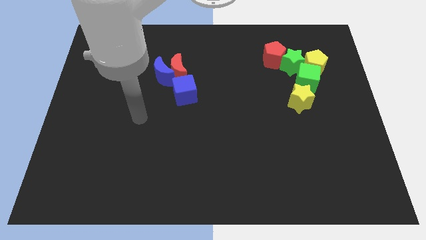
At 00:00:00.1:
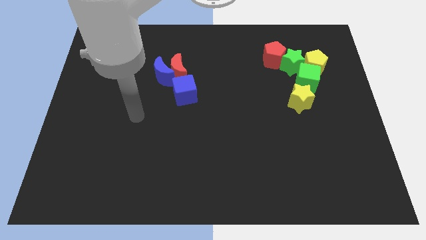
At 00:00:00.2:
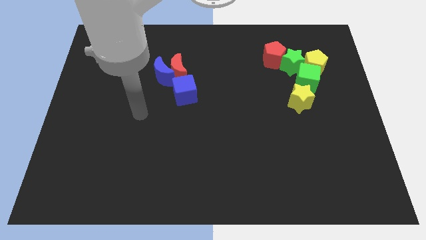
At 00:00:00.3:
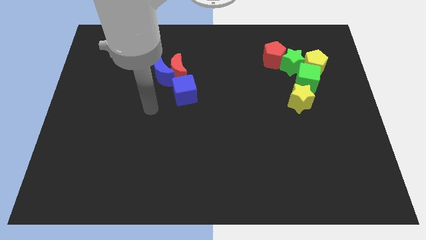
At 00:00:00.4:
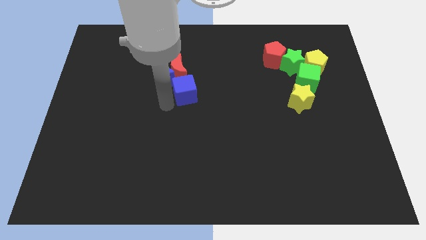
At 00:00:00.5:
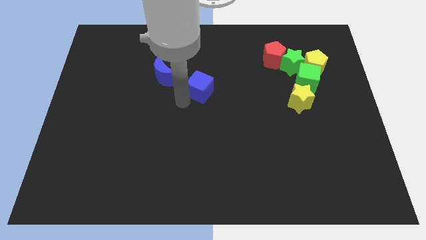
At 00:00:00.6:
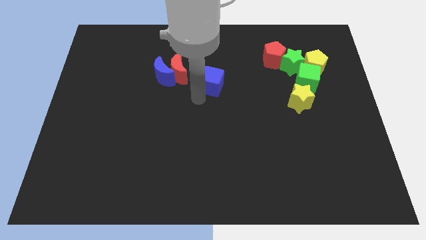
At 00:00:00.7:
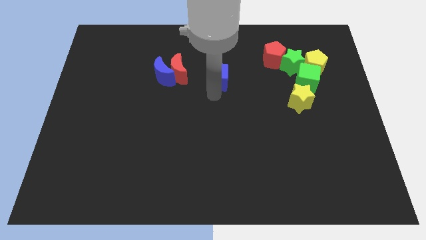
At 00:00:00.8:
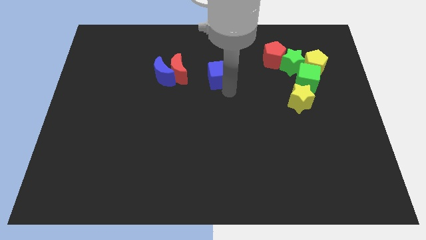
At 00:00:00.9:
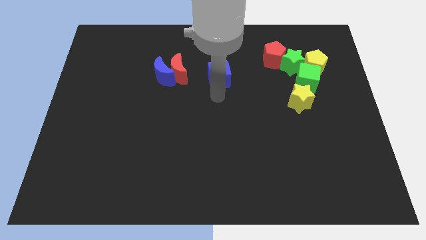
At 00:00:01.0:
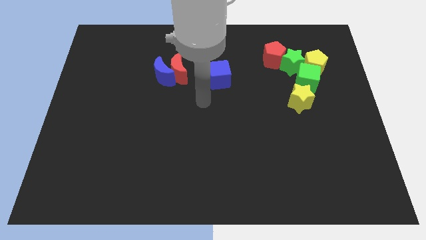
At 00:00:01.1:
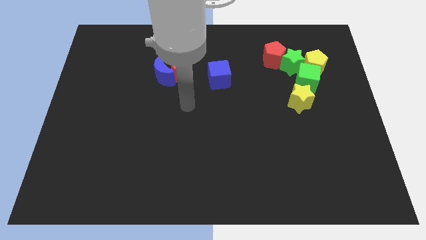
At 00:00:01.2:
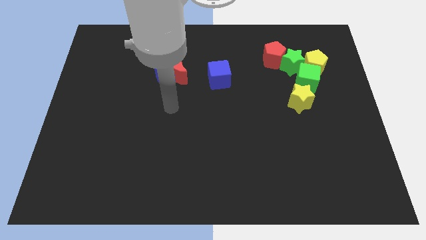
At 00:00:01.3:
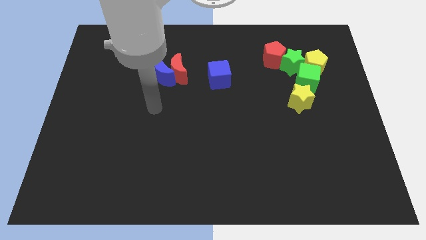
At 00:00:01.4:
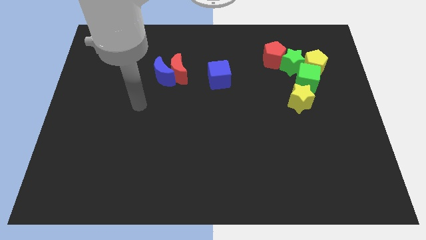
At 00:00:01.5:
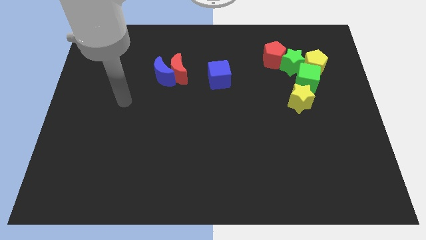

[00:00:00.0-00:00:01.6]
place the blue cube in between the red moon and the green cube

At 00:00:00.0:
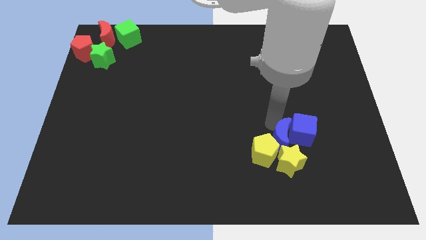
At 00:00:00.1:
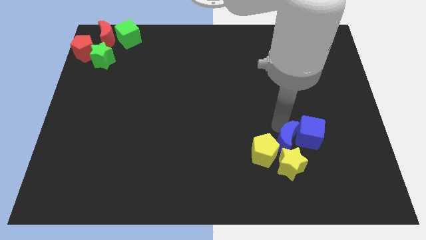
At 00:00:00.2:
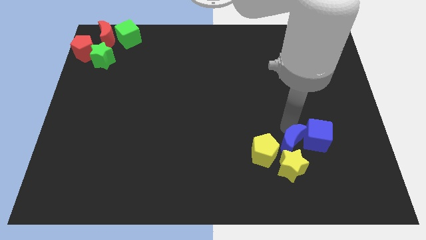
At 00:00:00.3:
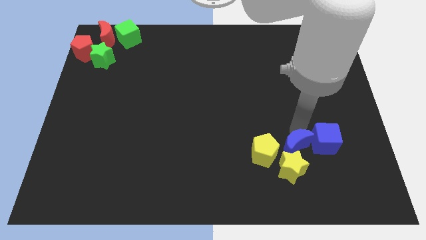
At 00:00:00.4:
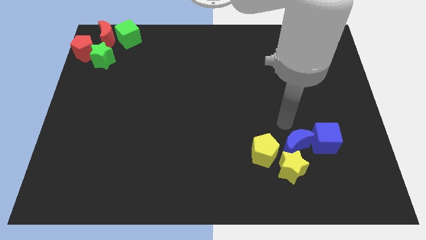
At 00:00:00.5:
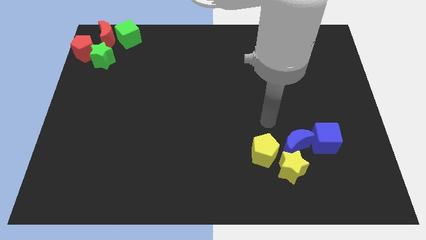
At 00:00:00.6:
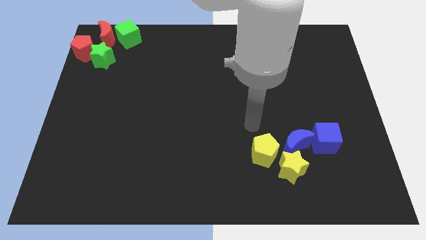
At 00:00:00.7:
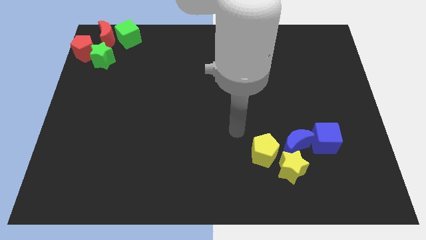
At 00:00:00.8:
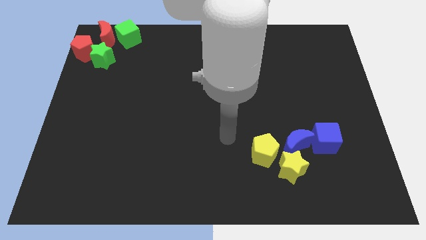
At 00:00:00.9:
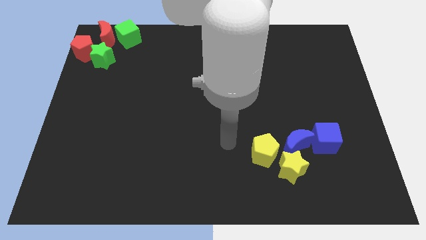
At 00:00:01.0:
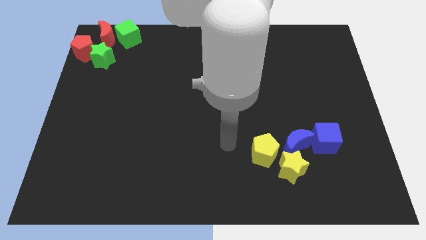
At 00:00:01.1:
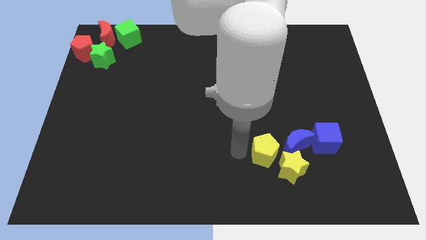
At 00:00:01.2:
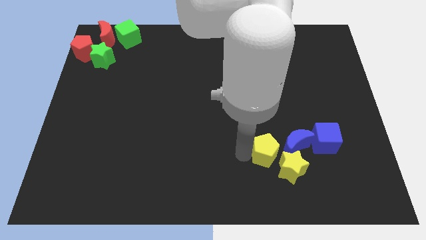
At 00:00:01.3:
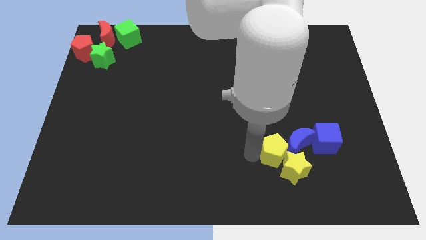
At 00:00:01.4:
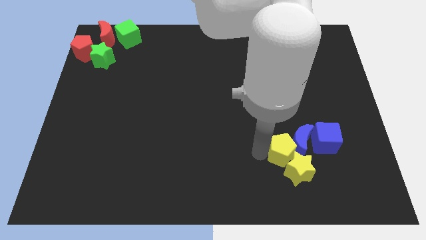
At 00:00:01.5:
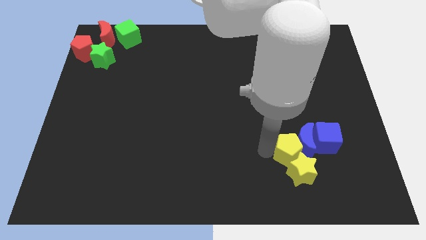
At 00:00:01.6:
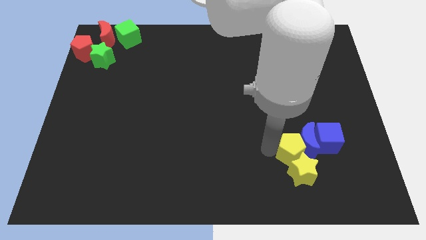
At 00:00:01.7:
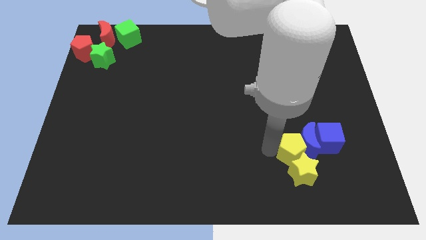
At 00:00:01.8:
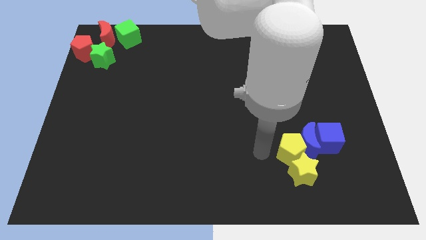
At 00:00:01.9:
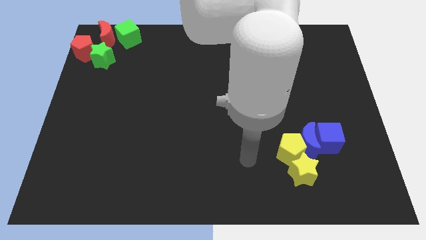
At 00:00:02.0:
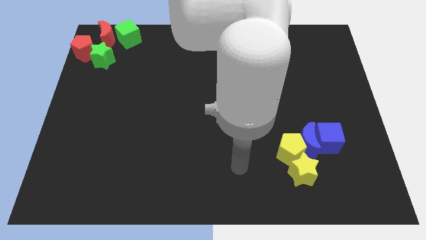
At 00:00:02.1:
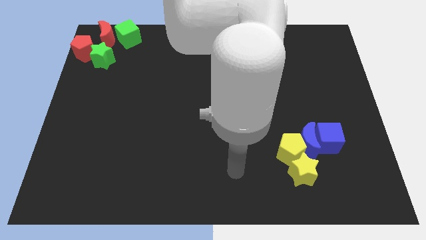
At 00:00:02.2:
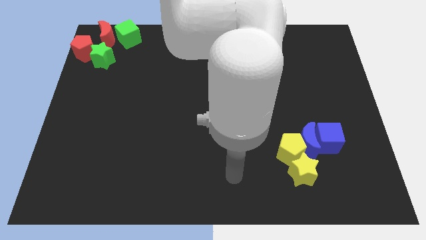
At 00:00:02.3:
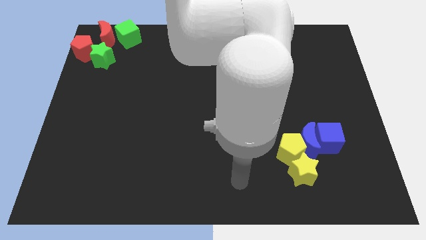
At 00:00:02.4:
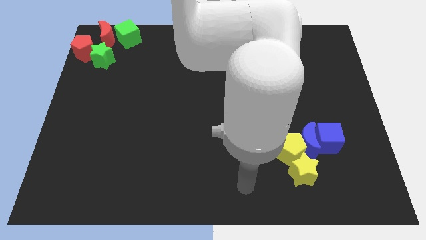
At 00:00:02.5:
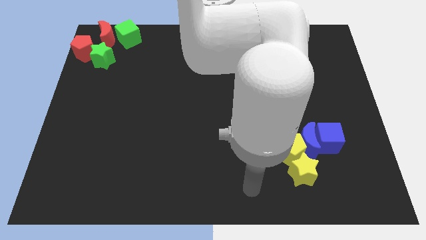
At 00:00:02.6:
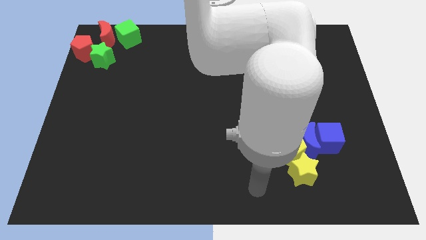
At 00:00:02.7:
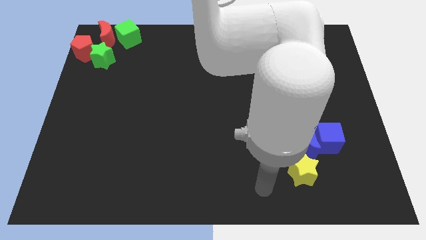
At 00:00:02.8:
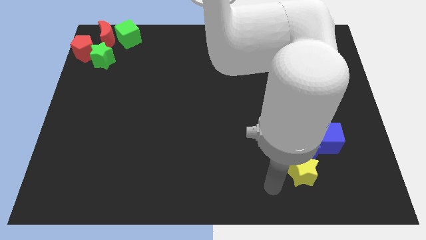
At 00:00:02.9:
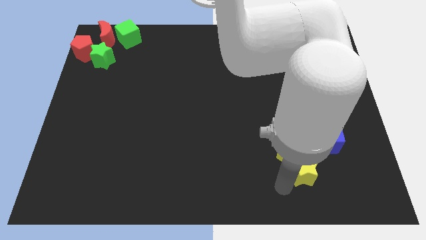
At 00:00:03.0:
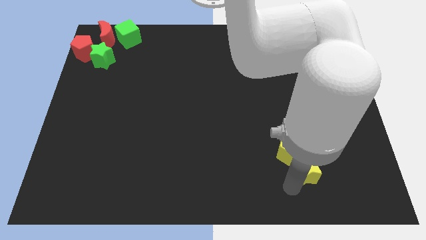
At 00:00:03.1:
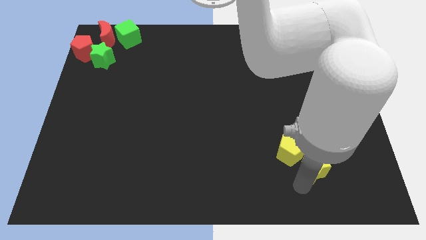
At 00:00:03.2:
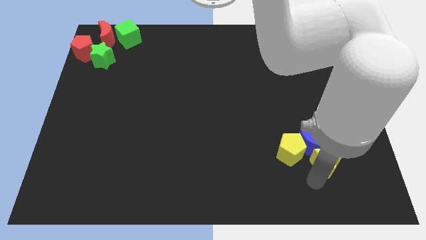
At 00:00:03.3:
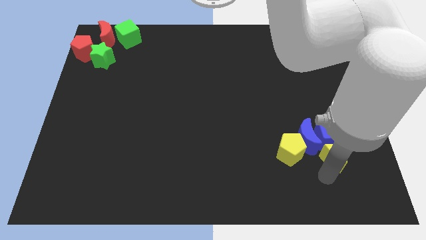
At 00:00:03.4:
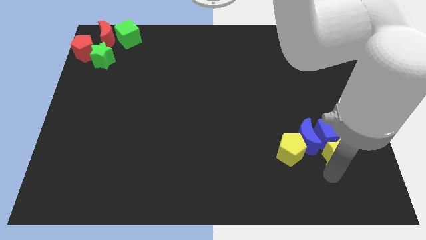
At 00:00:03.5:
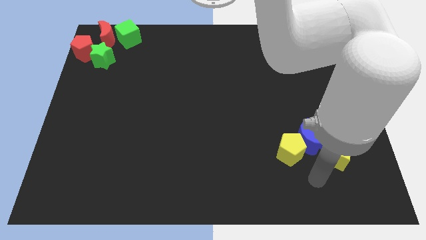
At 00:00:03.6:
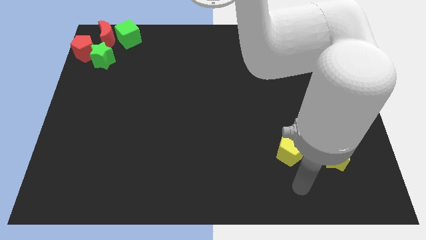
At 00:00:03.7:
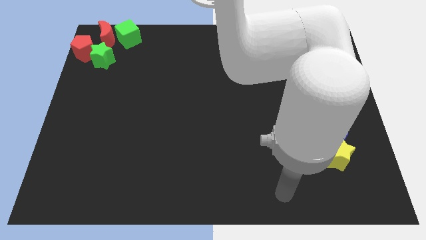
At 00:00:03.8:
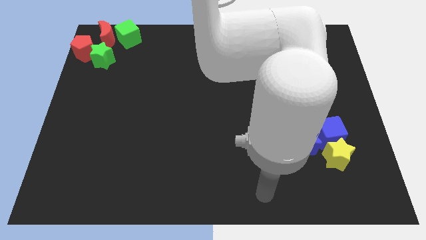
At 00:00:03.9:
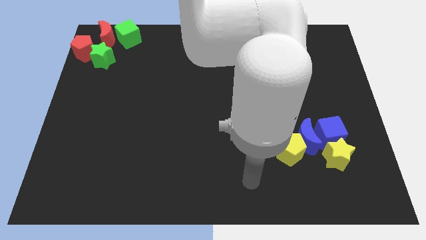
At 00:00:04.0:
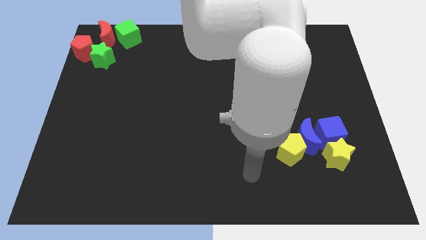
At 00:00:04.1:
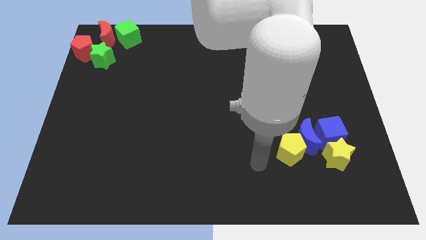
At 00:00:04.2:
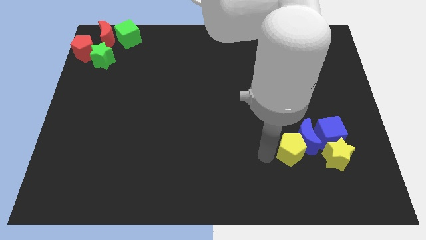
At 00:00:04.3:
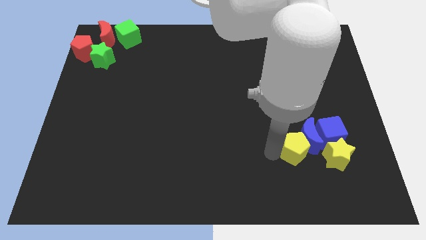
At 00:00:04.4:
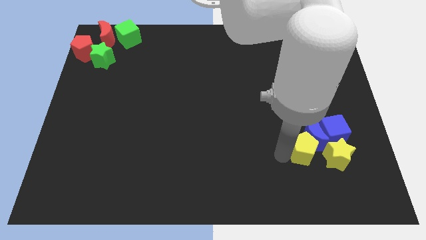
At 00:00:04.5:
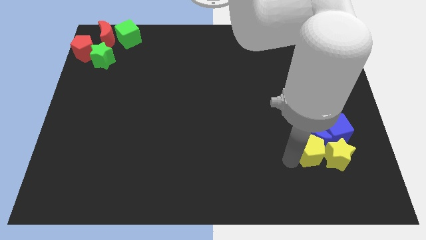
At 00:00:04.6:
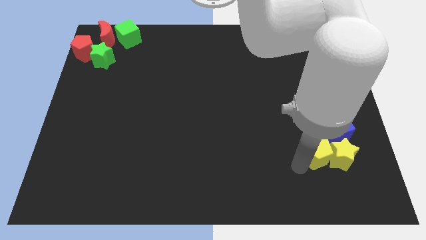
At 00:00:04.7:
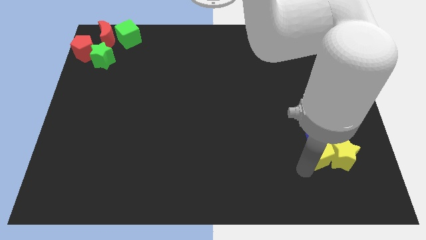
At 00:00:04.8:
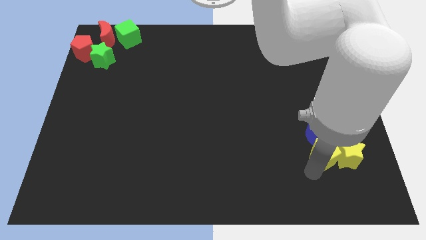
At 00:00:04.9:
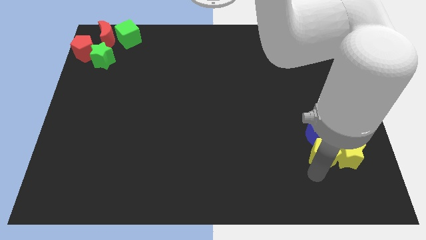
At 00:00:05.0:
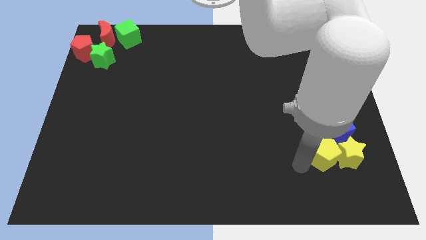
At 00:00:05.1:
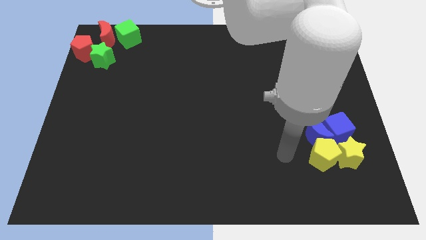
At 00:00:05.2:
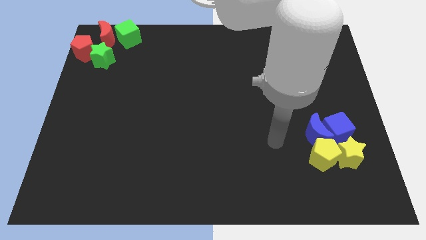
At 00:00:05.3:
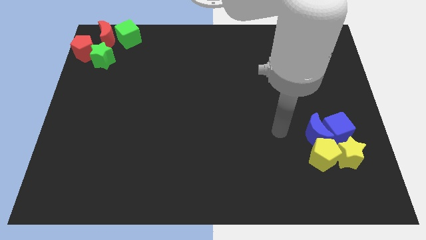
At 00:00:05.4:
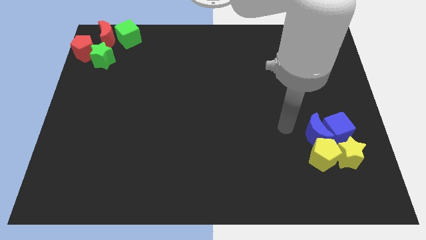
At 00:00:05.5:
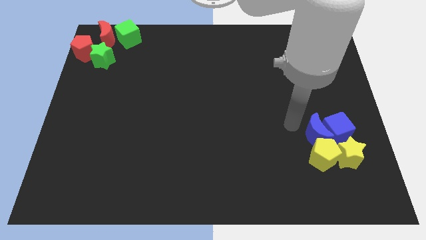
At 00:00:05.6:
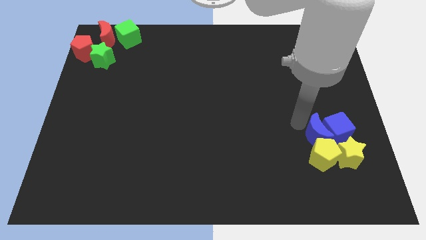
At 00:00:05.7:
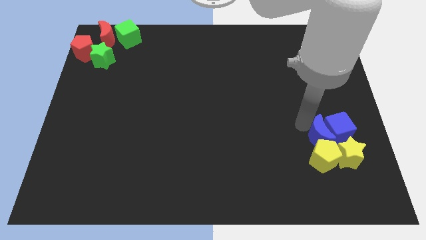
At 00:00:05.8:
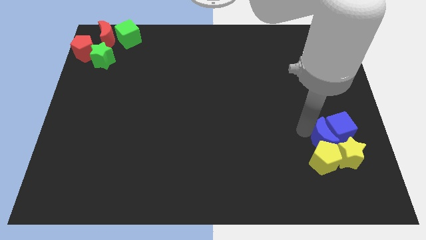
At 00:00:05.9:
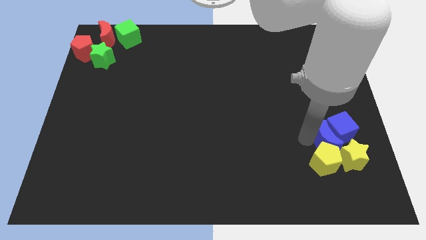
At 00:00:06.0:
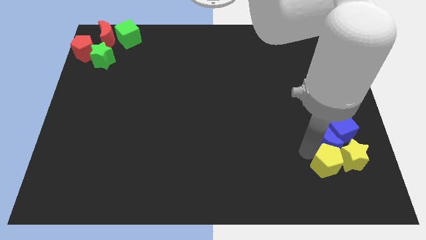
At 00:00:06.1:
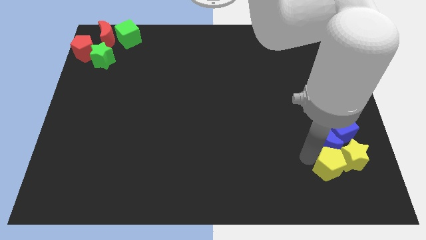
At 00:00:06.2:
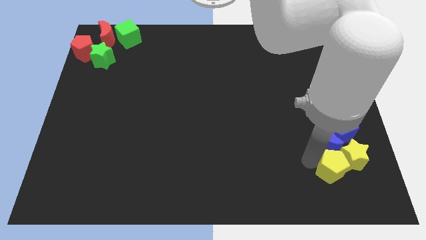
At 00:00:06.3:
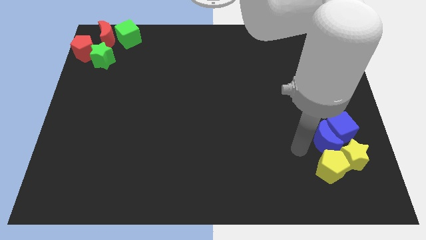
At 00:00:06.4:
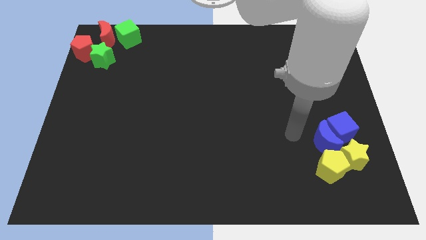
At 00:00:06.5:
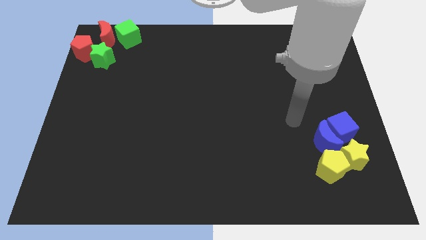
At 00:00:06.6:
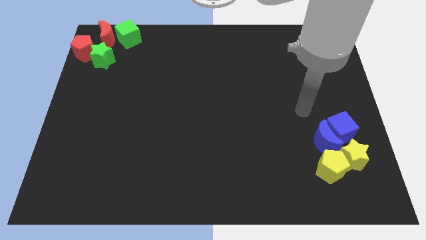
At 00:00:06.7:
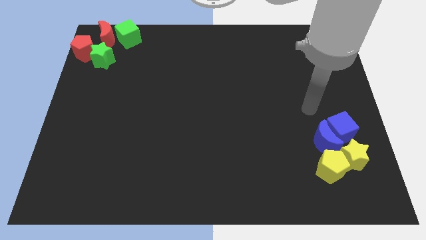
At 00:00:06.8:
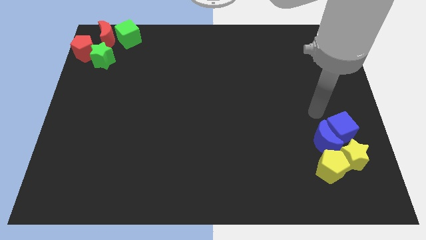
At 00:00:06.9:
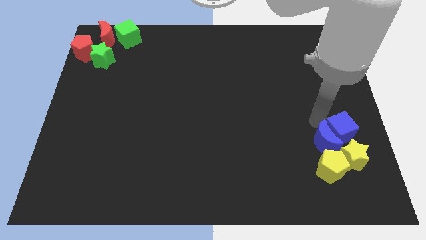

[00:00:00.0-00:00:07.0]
push a group of blocks to the bottom right corner of the board

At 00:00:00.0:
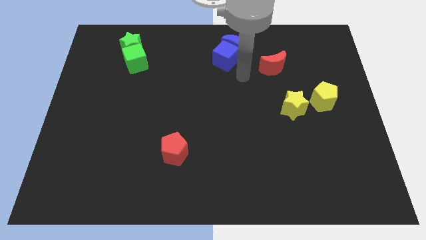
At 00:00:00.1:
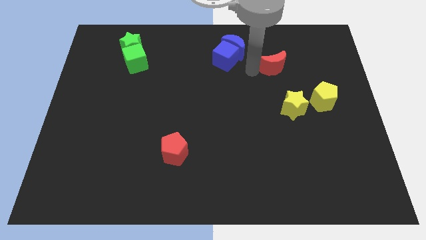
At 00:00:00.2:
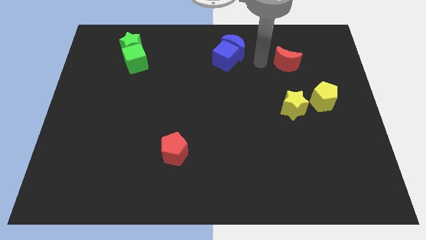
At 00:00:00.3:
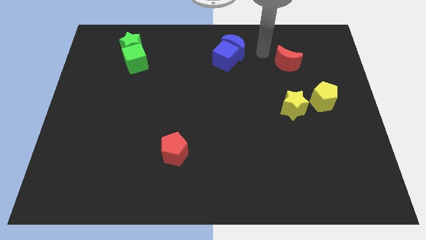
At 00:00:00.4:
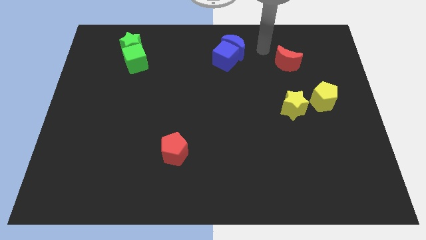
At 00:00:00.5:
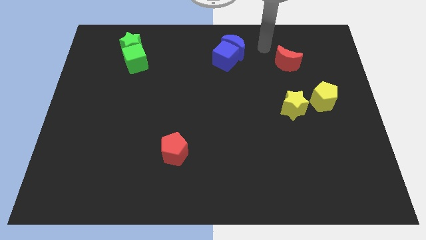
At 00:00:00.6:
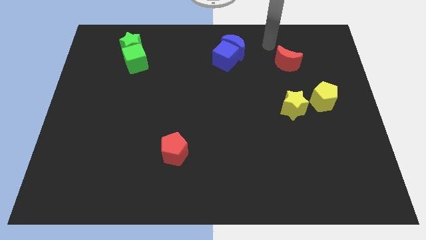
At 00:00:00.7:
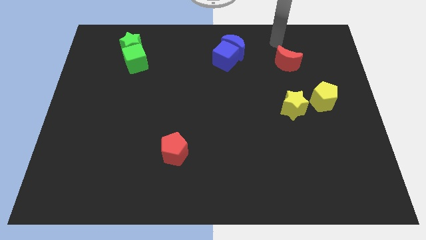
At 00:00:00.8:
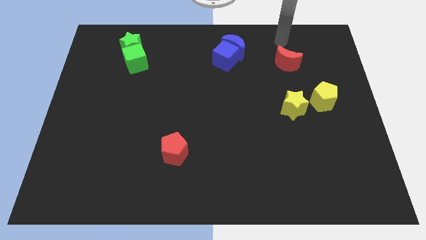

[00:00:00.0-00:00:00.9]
tap the red crescent
